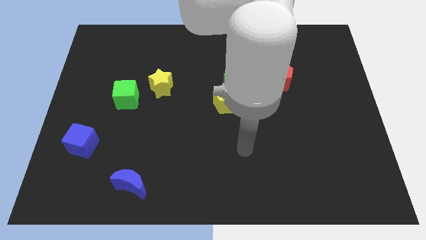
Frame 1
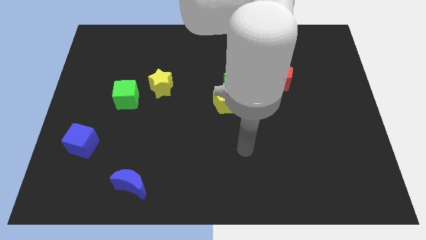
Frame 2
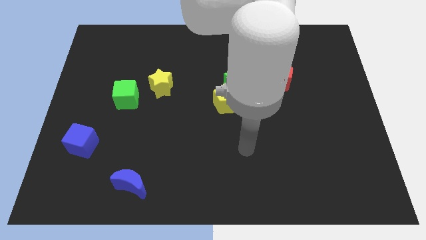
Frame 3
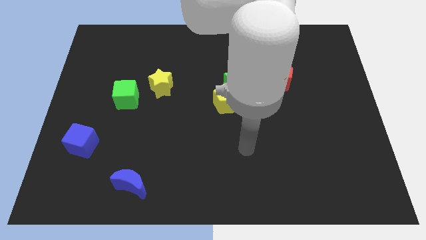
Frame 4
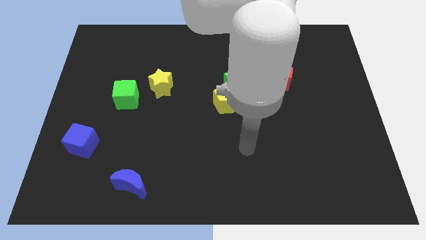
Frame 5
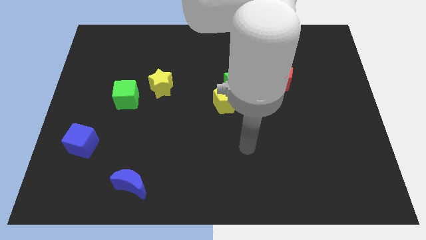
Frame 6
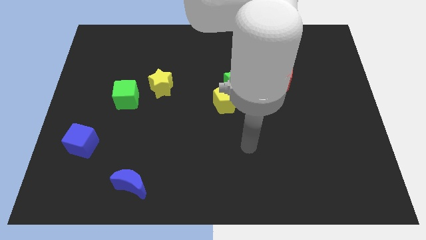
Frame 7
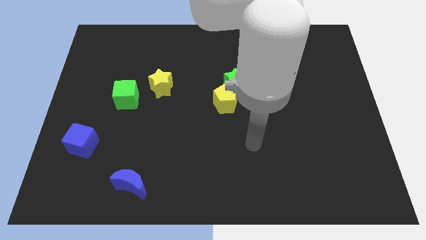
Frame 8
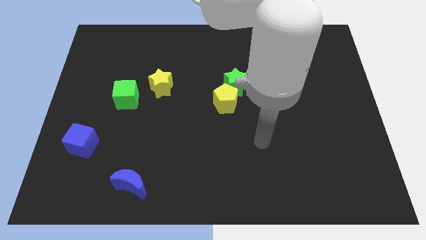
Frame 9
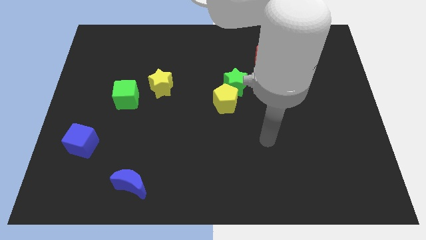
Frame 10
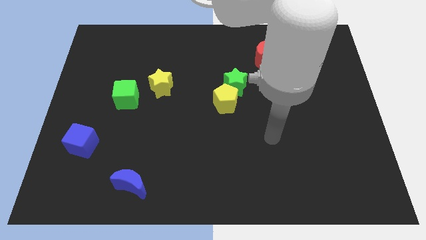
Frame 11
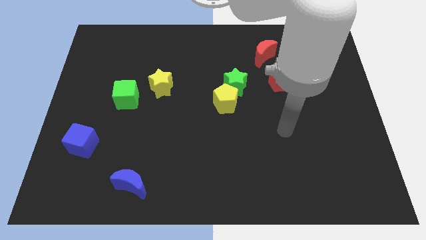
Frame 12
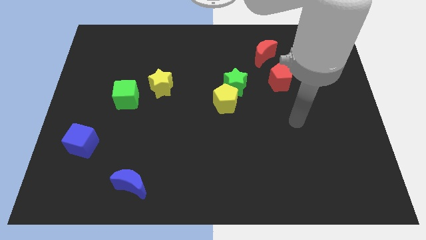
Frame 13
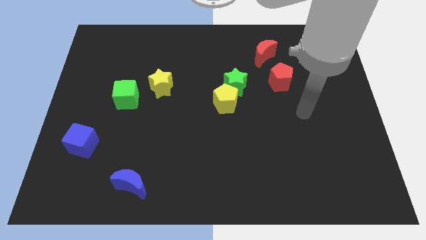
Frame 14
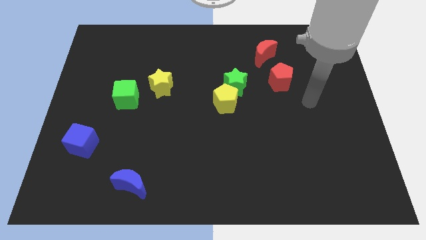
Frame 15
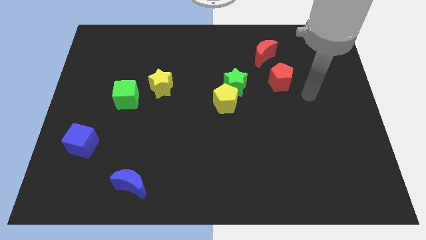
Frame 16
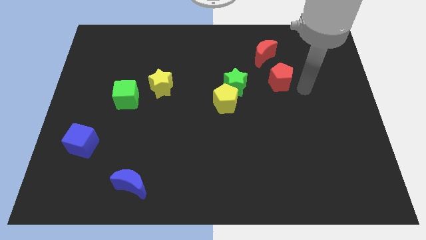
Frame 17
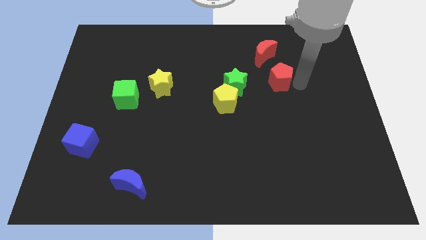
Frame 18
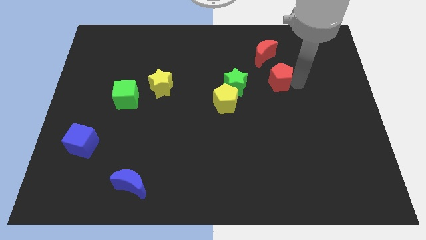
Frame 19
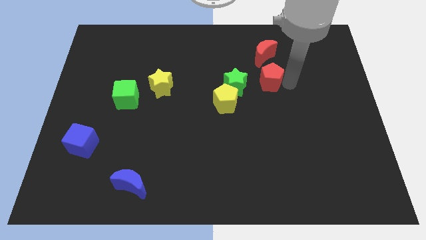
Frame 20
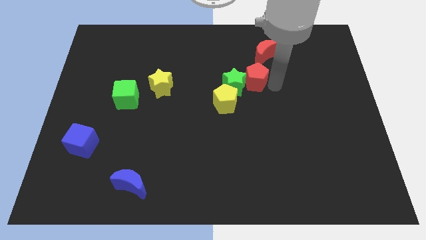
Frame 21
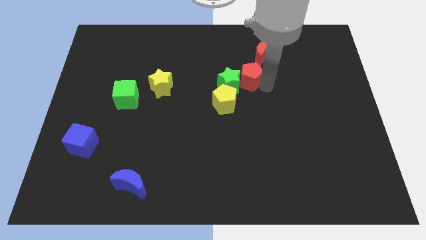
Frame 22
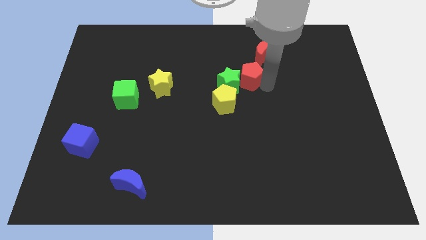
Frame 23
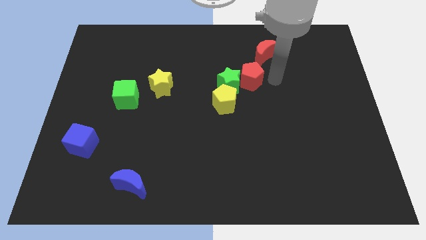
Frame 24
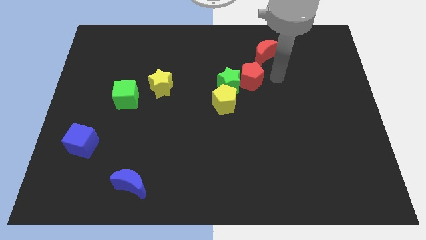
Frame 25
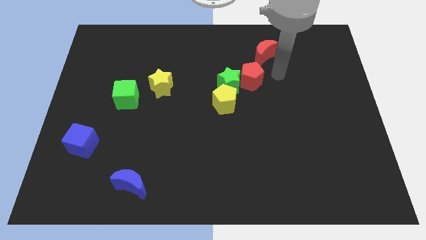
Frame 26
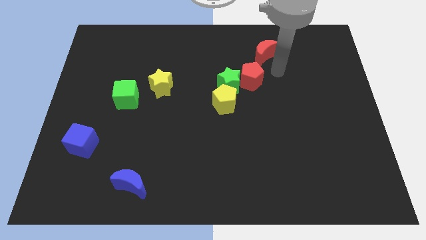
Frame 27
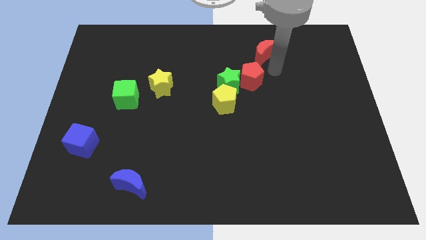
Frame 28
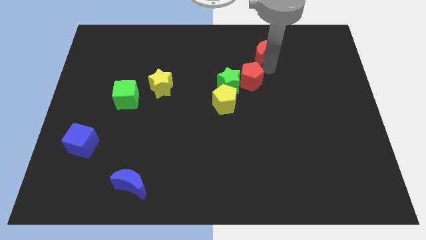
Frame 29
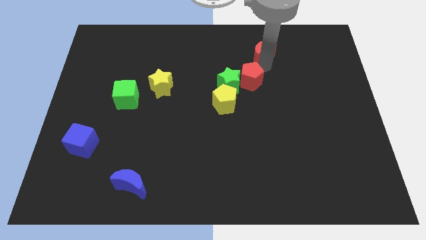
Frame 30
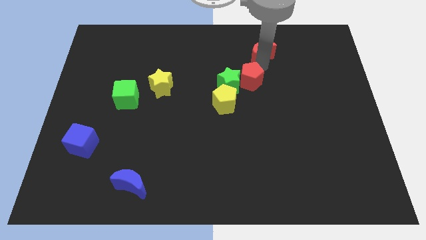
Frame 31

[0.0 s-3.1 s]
slide the red pentagon into the right side of the green star

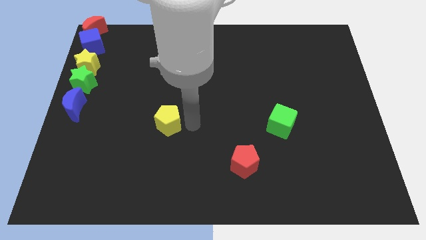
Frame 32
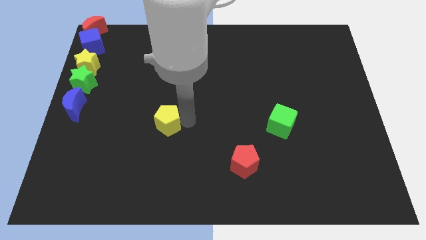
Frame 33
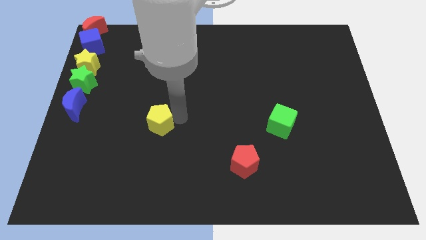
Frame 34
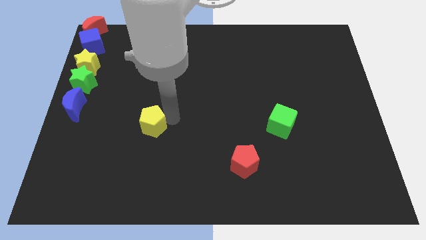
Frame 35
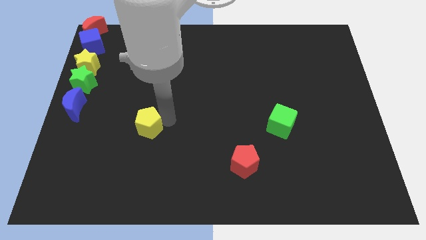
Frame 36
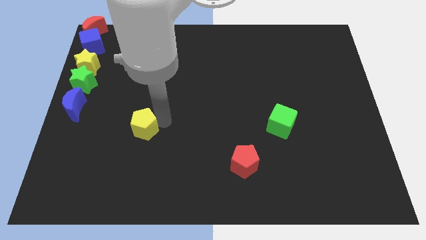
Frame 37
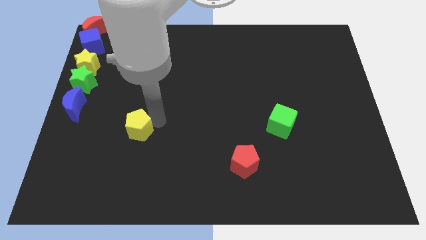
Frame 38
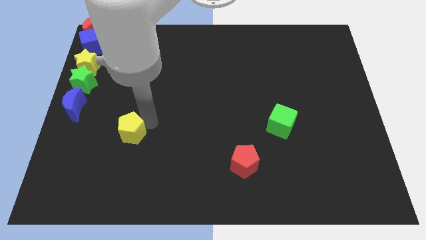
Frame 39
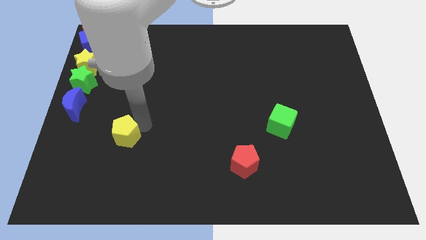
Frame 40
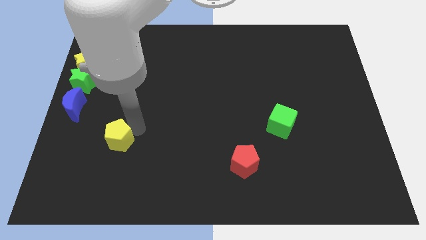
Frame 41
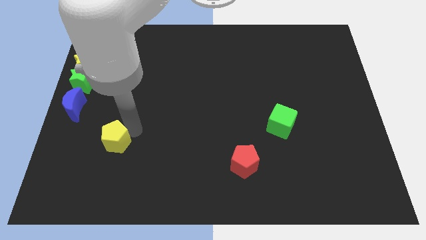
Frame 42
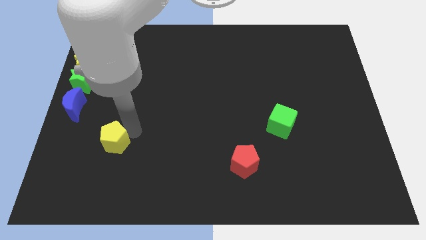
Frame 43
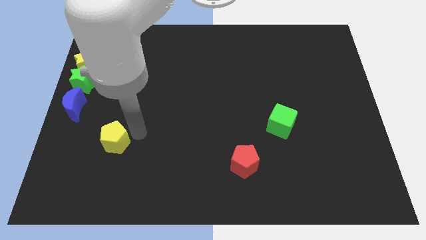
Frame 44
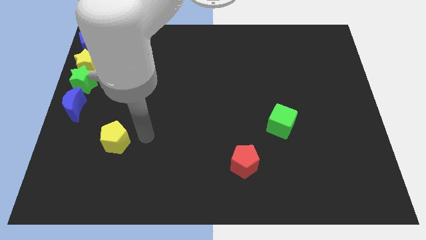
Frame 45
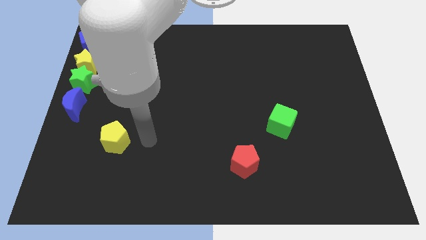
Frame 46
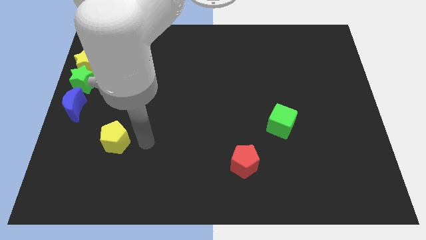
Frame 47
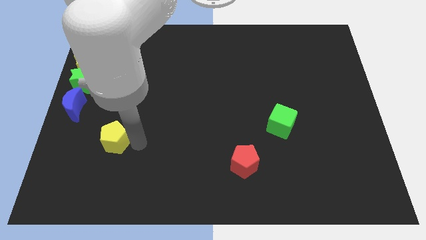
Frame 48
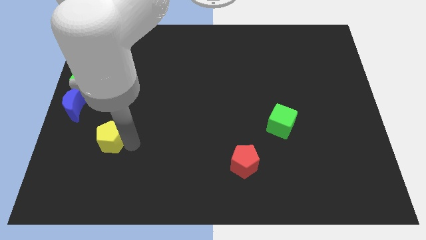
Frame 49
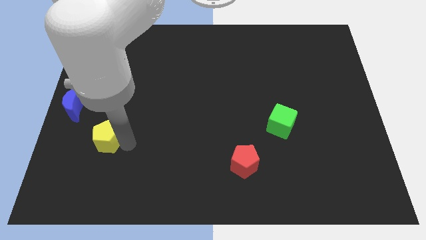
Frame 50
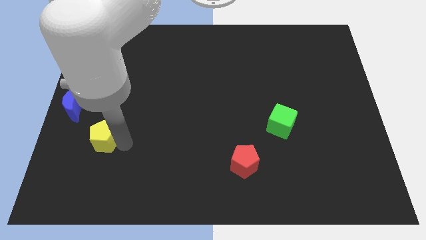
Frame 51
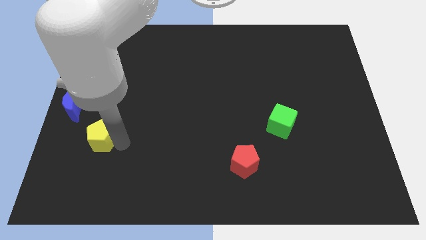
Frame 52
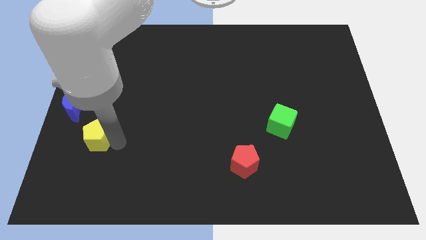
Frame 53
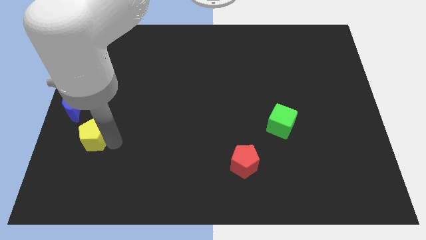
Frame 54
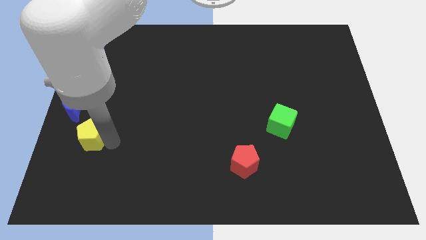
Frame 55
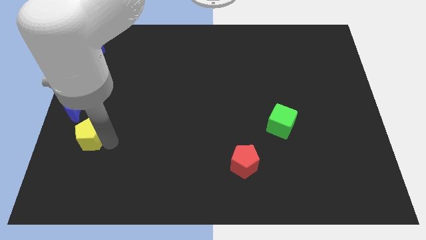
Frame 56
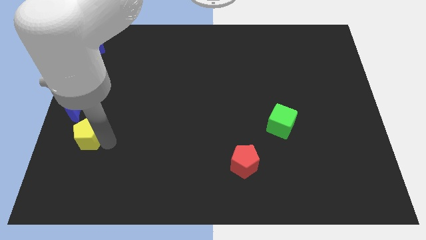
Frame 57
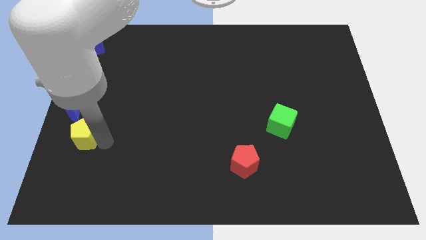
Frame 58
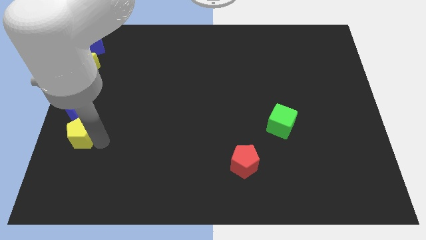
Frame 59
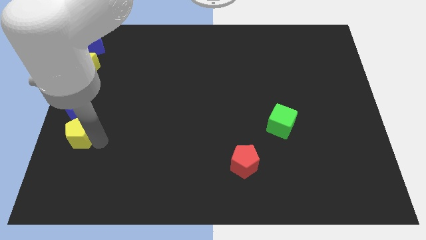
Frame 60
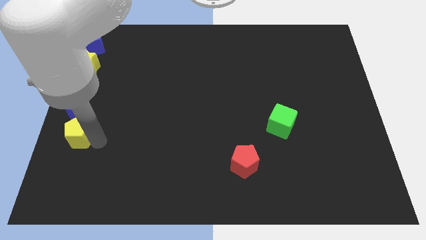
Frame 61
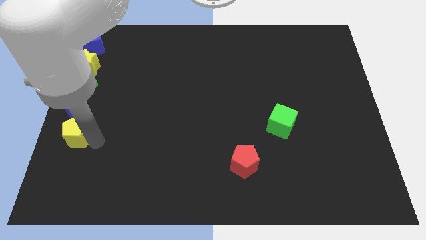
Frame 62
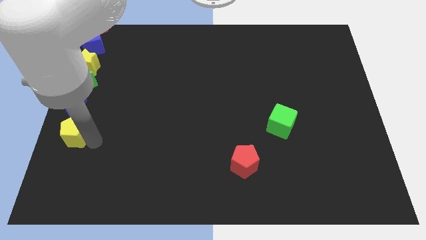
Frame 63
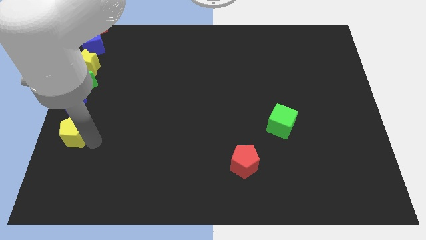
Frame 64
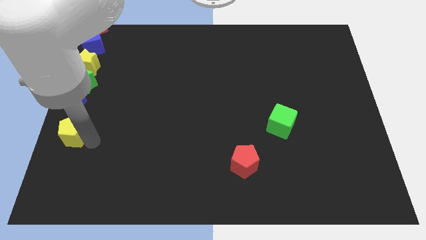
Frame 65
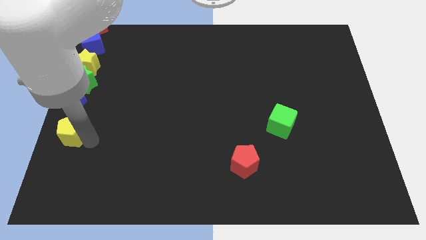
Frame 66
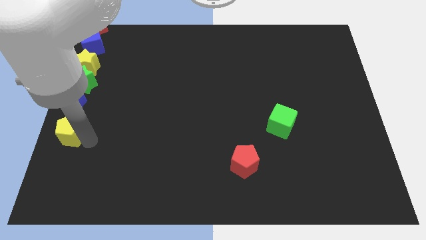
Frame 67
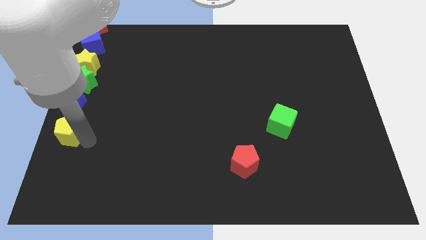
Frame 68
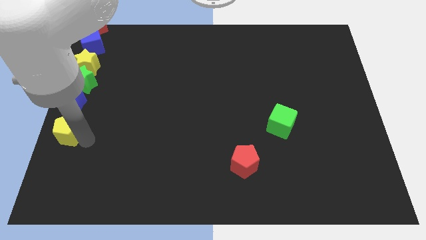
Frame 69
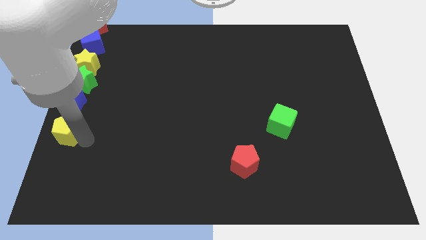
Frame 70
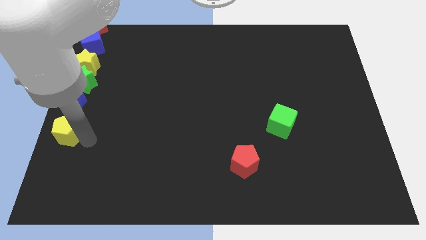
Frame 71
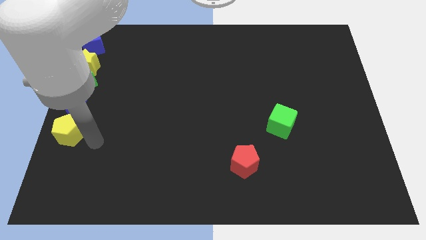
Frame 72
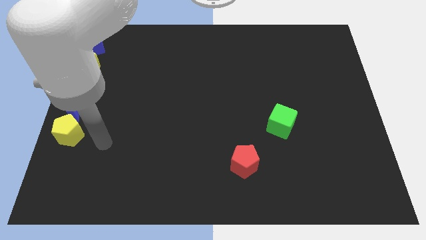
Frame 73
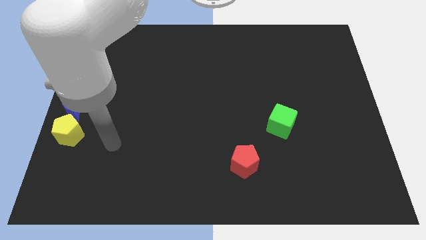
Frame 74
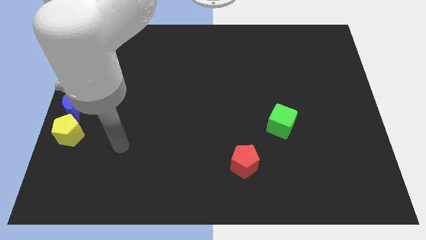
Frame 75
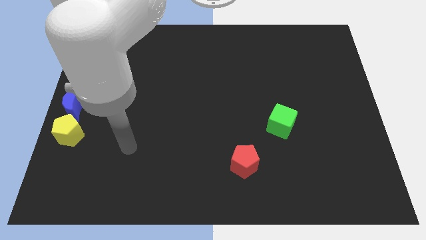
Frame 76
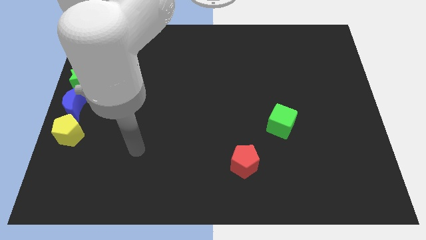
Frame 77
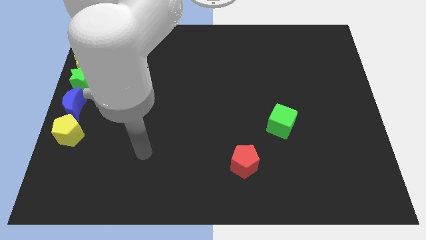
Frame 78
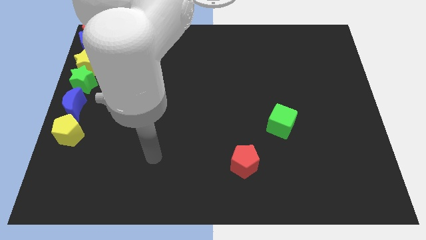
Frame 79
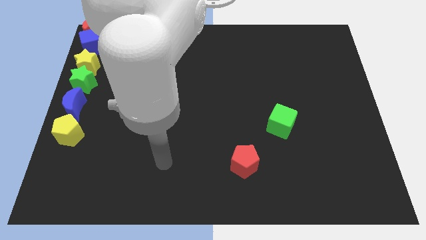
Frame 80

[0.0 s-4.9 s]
push the yellow pentagon to the bottom of the blue crescent

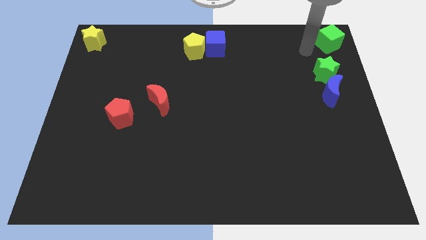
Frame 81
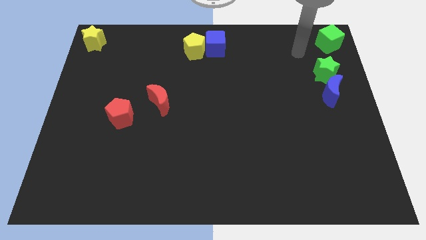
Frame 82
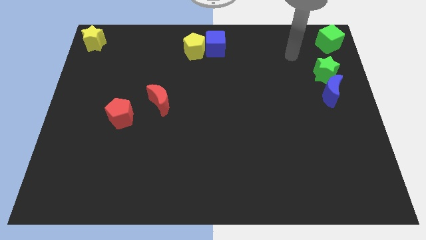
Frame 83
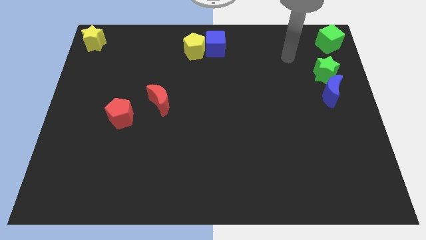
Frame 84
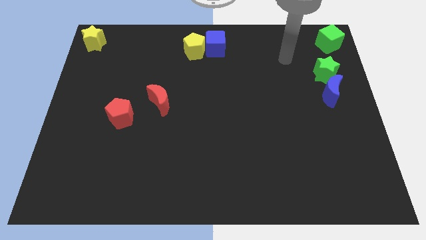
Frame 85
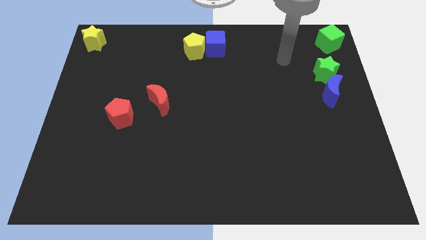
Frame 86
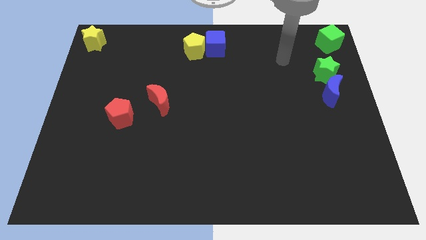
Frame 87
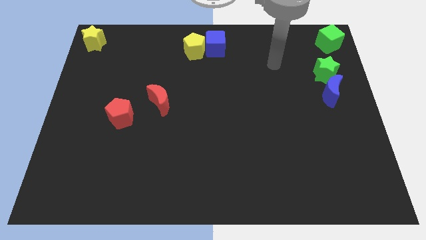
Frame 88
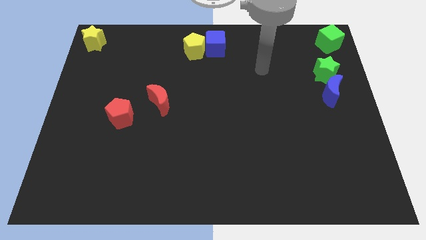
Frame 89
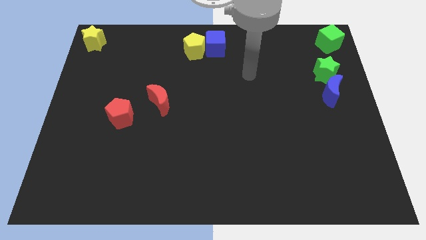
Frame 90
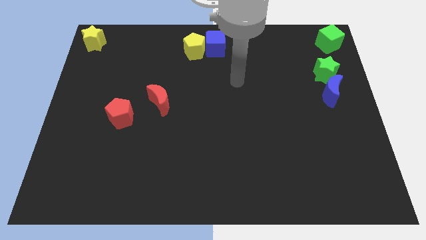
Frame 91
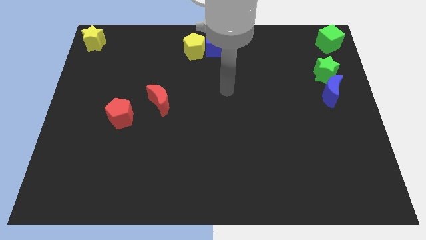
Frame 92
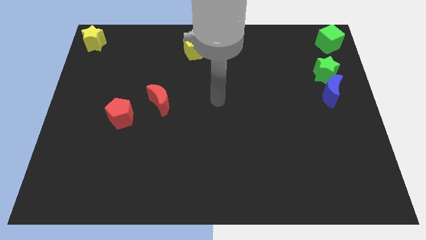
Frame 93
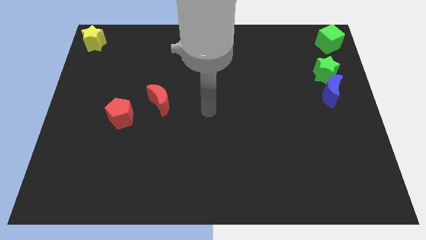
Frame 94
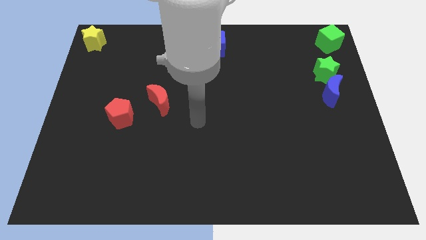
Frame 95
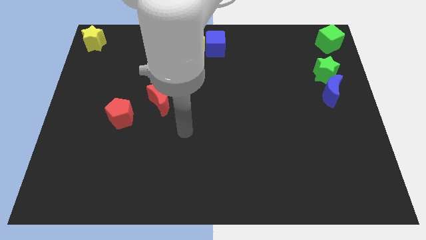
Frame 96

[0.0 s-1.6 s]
move the arm away from the green cube
